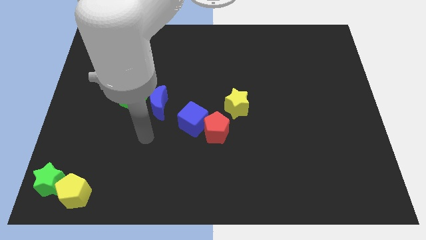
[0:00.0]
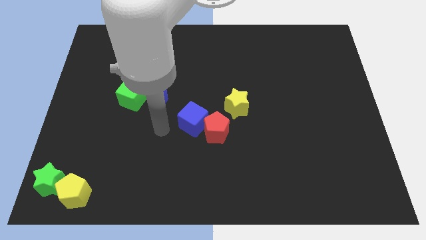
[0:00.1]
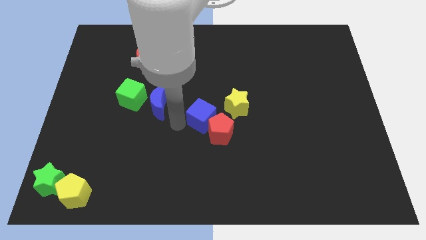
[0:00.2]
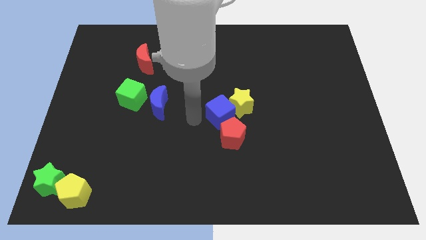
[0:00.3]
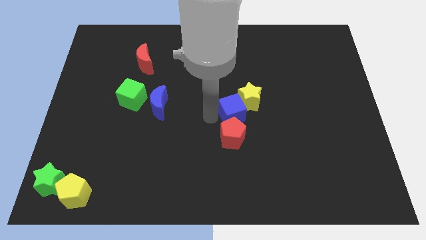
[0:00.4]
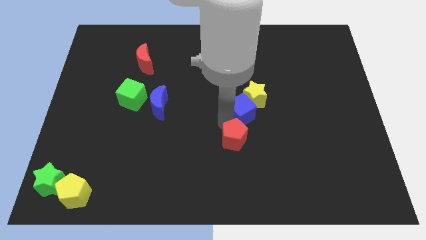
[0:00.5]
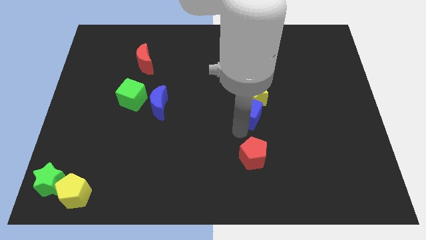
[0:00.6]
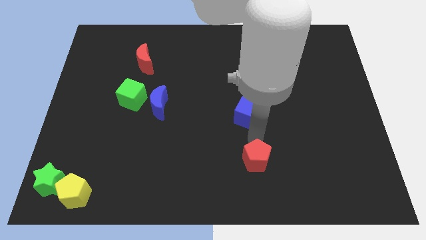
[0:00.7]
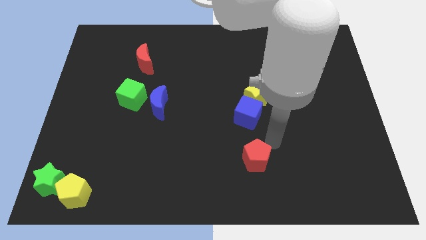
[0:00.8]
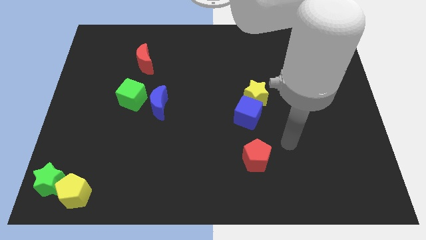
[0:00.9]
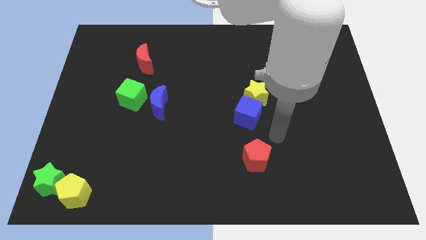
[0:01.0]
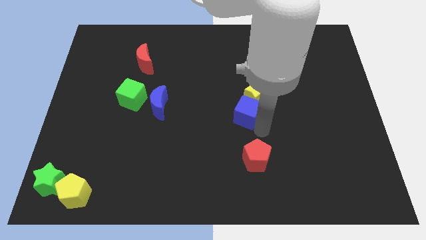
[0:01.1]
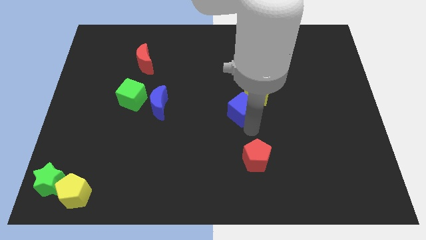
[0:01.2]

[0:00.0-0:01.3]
separate the blue cube and red pentagon

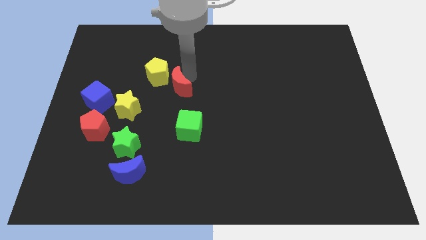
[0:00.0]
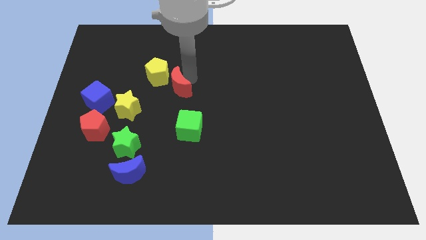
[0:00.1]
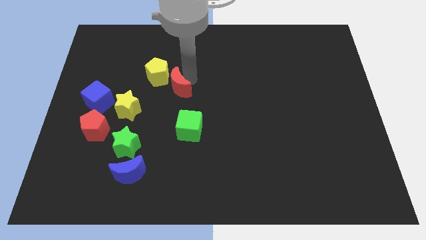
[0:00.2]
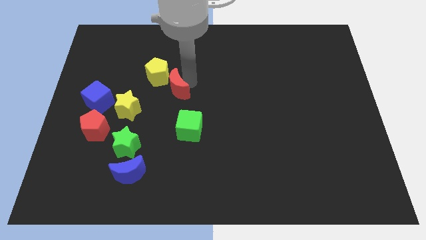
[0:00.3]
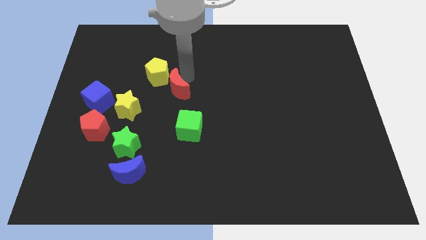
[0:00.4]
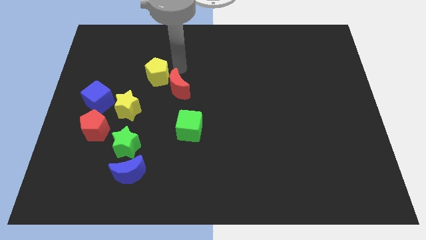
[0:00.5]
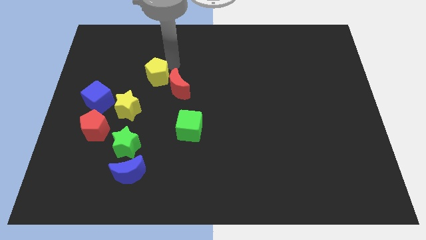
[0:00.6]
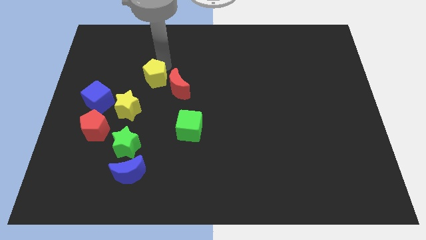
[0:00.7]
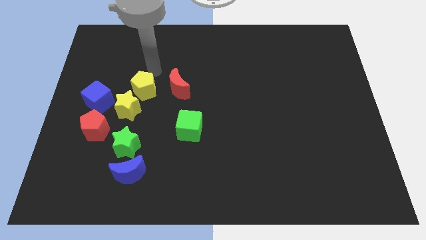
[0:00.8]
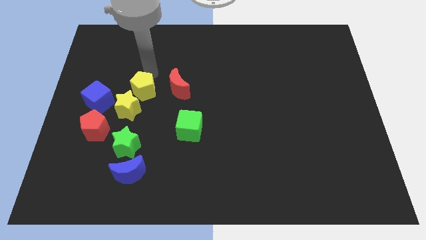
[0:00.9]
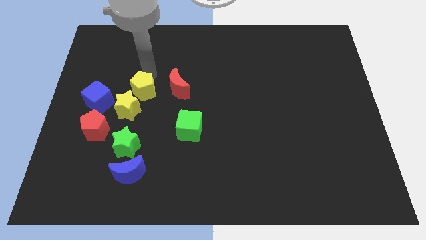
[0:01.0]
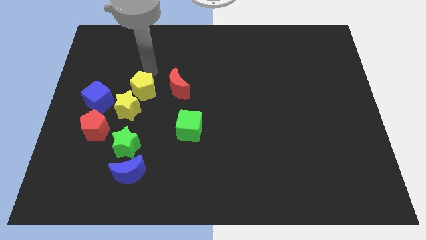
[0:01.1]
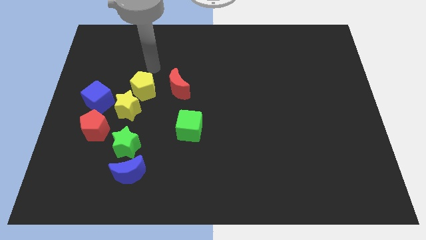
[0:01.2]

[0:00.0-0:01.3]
move yellow pentagon close to the yellow star

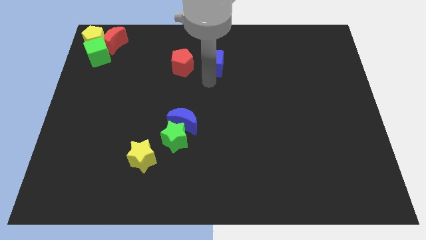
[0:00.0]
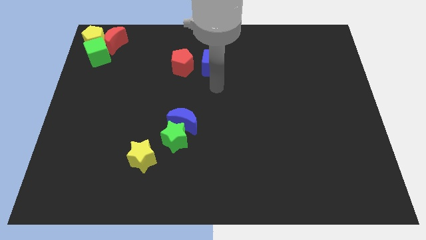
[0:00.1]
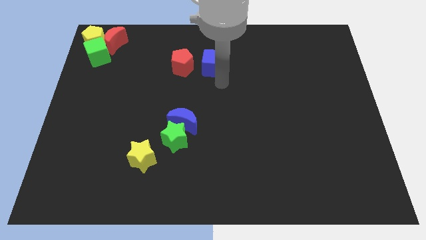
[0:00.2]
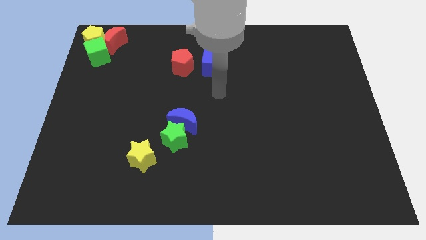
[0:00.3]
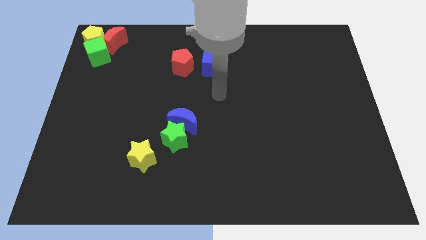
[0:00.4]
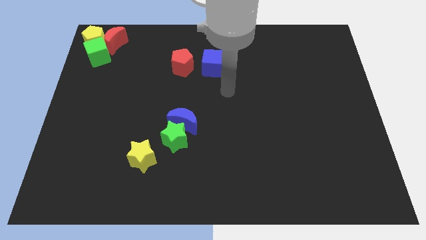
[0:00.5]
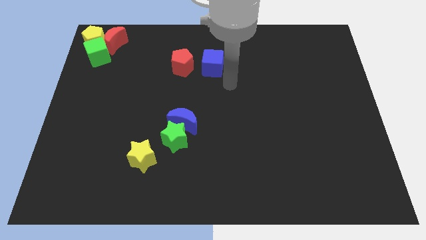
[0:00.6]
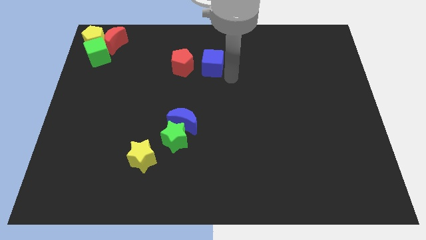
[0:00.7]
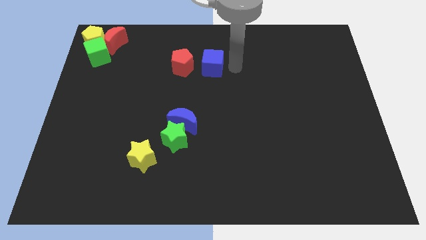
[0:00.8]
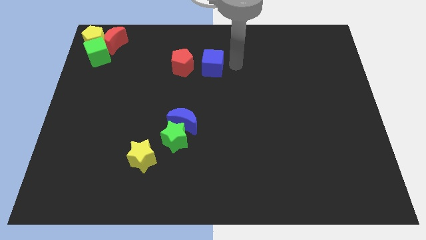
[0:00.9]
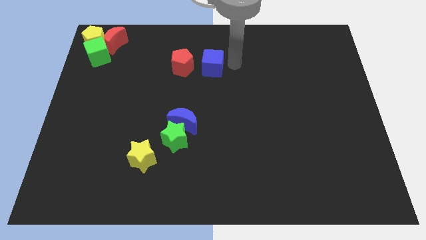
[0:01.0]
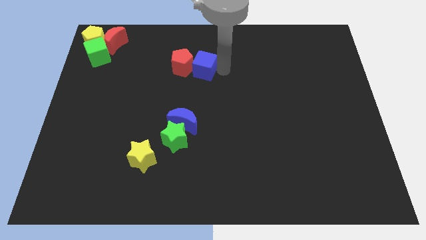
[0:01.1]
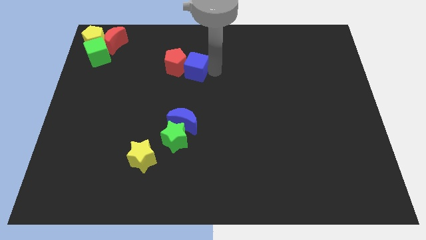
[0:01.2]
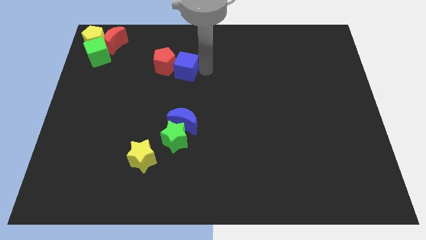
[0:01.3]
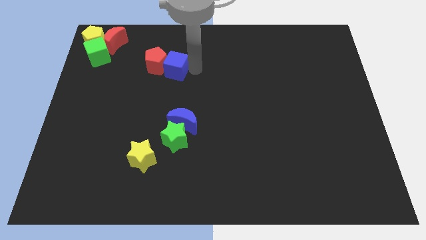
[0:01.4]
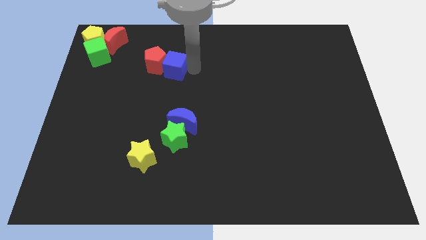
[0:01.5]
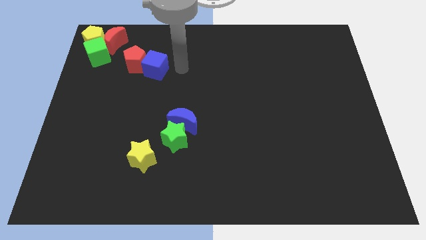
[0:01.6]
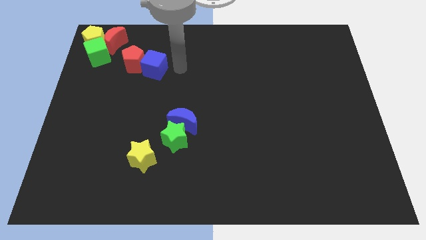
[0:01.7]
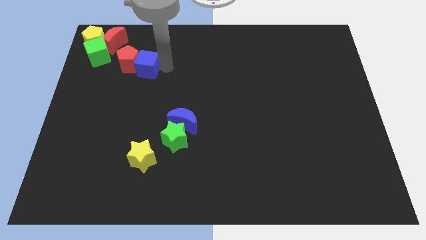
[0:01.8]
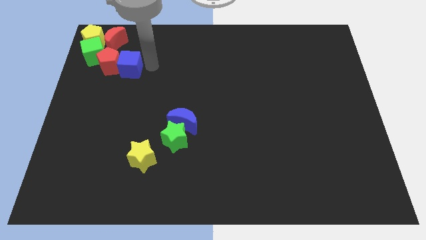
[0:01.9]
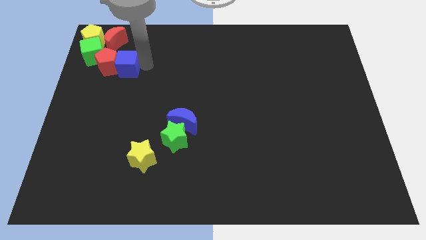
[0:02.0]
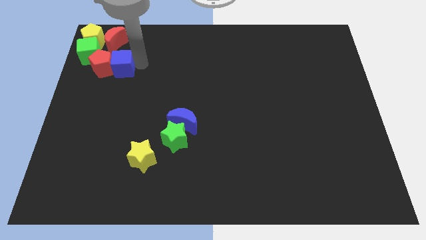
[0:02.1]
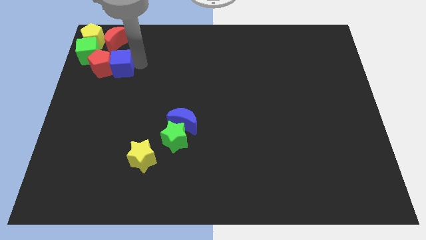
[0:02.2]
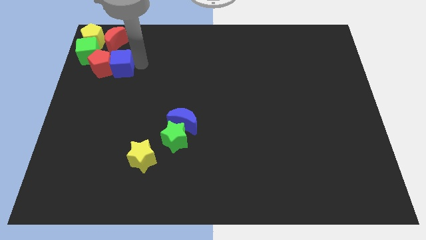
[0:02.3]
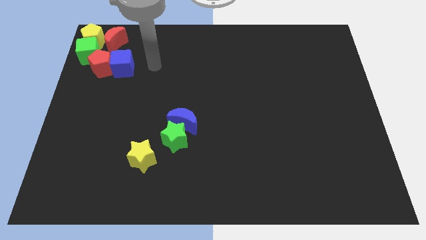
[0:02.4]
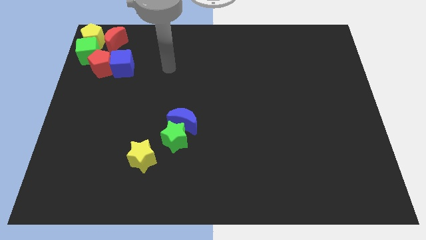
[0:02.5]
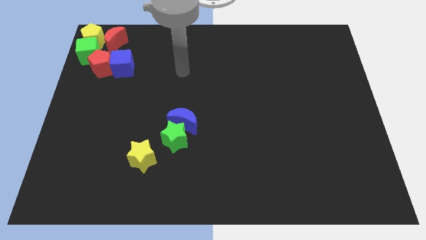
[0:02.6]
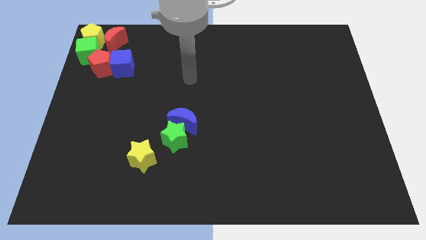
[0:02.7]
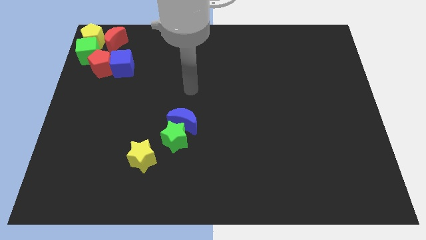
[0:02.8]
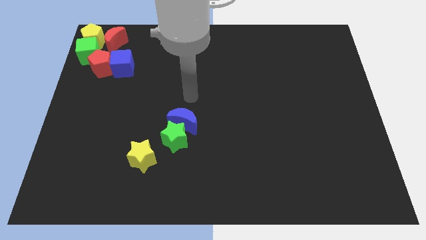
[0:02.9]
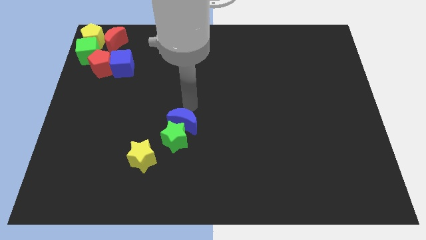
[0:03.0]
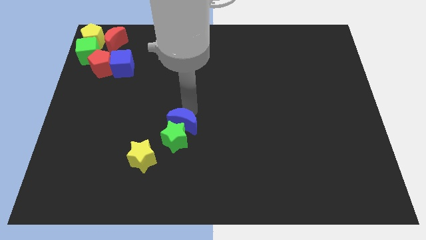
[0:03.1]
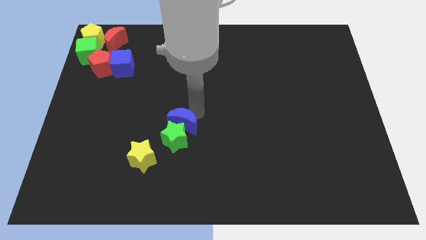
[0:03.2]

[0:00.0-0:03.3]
push the blue cube and the red pentagon to the top left of the board

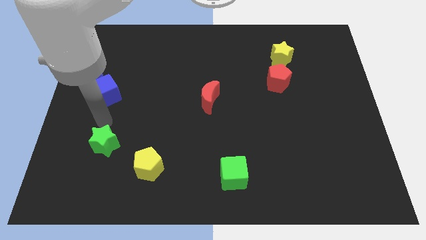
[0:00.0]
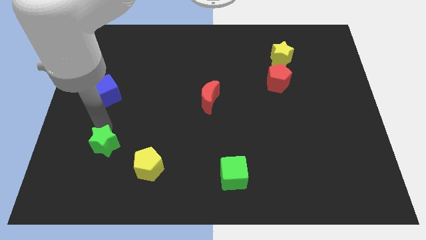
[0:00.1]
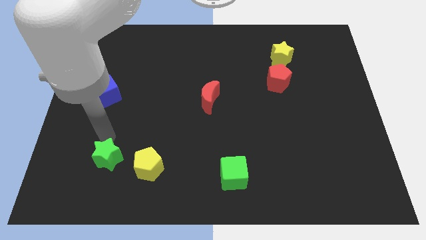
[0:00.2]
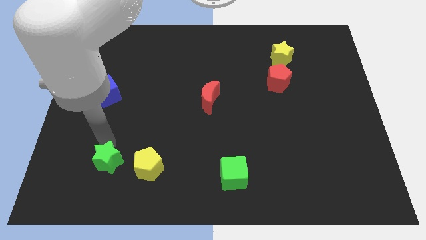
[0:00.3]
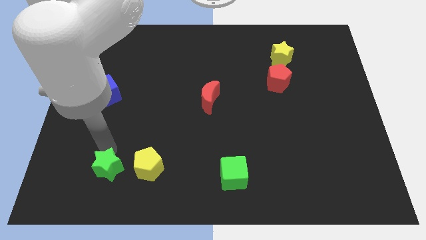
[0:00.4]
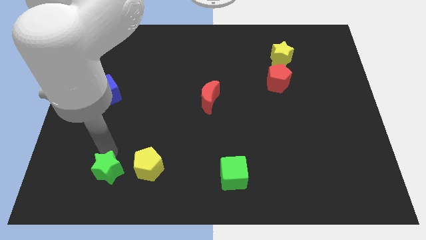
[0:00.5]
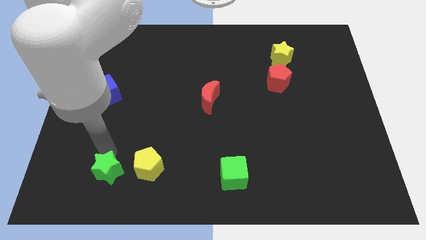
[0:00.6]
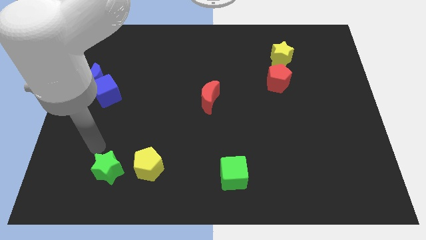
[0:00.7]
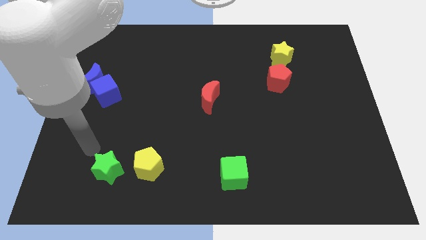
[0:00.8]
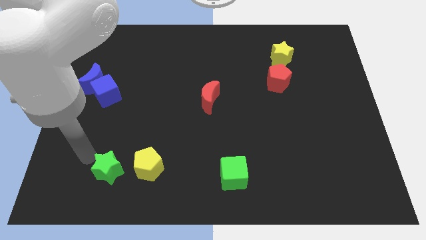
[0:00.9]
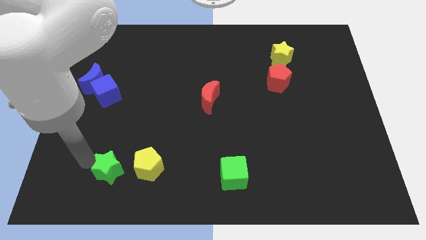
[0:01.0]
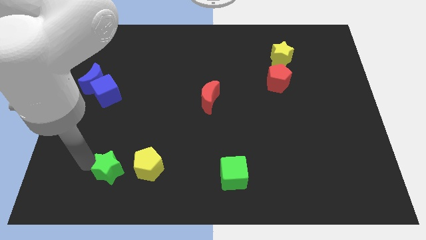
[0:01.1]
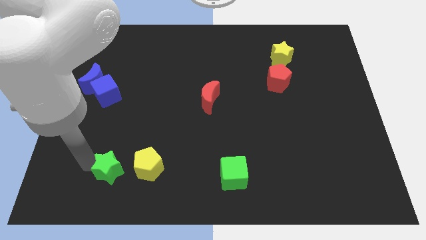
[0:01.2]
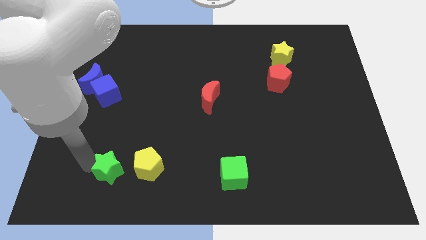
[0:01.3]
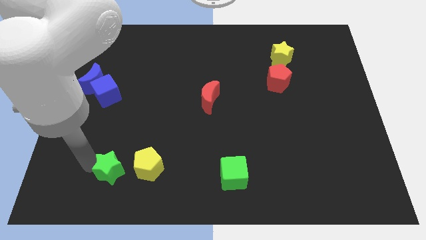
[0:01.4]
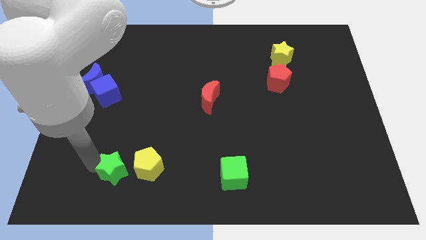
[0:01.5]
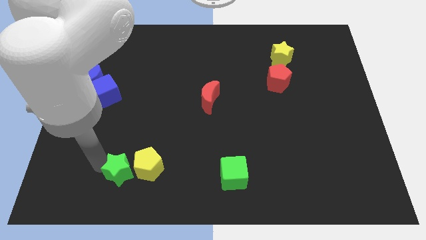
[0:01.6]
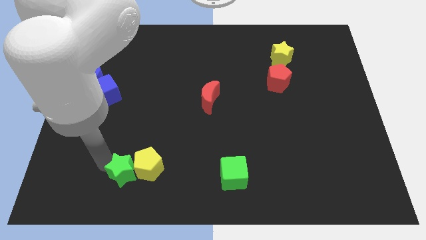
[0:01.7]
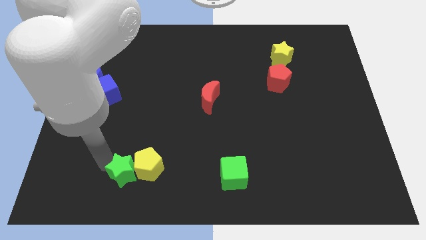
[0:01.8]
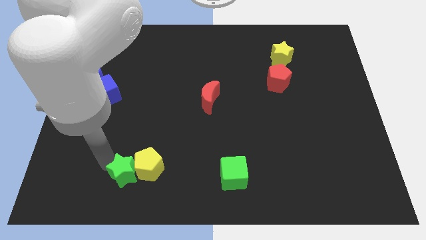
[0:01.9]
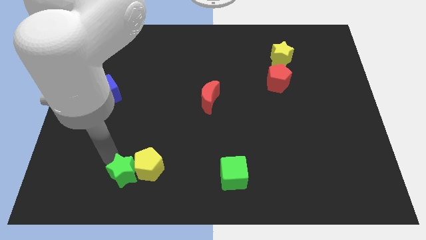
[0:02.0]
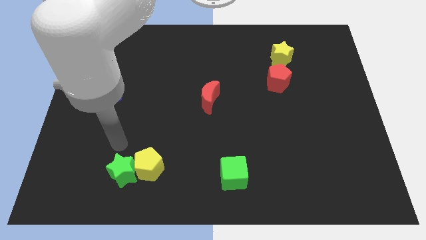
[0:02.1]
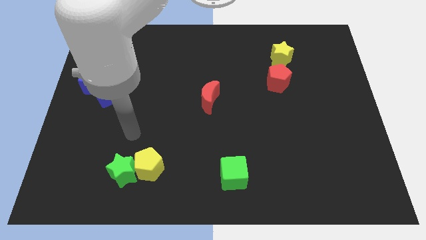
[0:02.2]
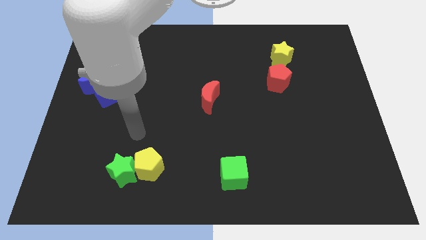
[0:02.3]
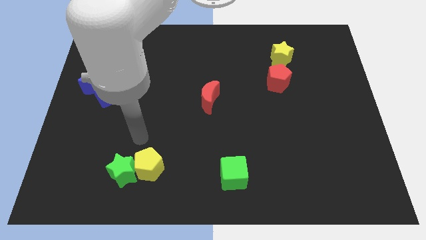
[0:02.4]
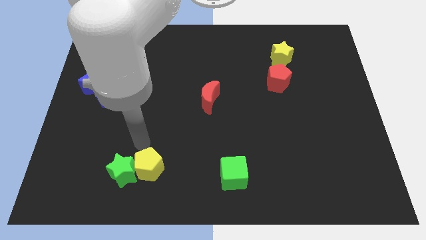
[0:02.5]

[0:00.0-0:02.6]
slide the green star into the left side of the yellow pentagon

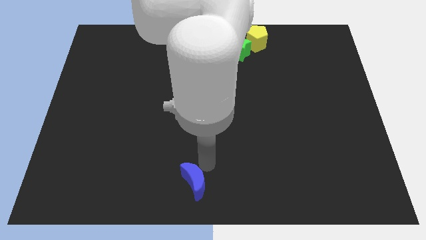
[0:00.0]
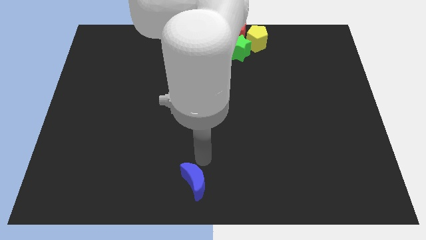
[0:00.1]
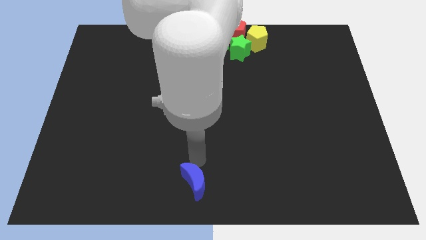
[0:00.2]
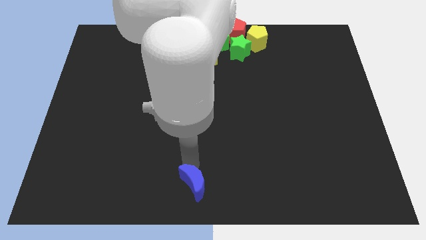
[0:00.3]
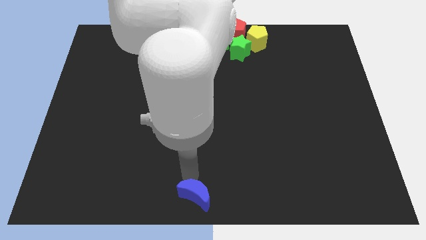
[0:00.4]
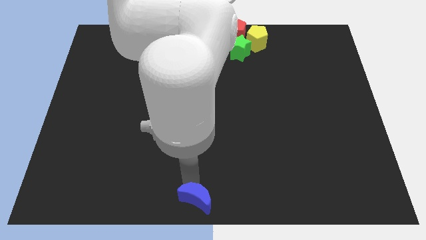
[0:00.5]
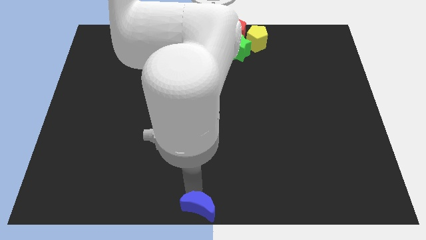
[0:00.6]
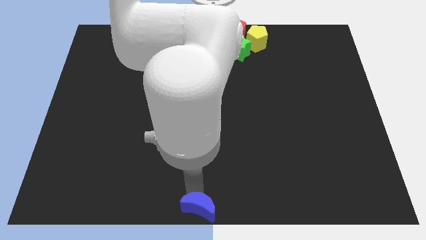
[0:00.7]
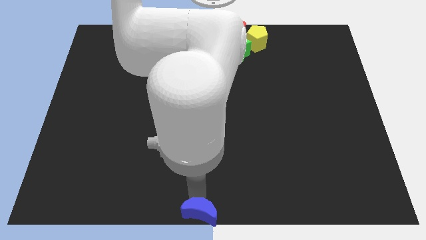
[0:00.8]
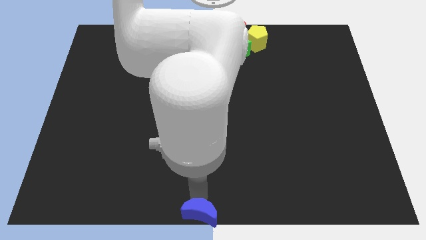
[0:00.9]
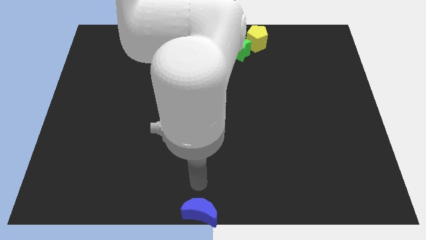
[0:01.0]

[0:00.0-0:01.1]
place the blue crescent at the bottom center of the board
